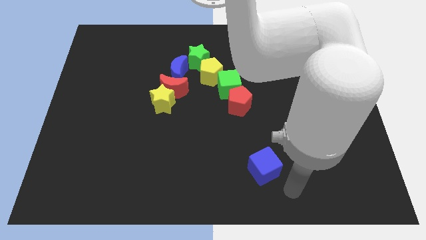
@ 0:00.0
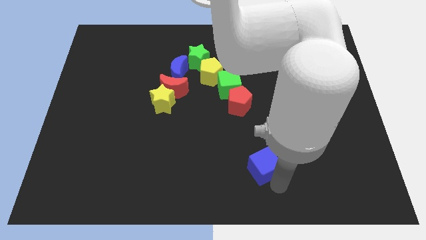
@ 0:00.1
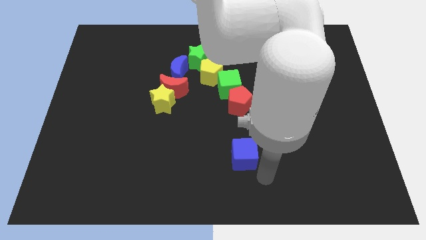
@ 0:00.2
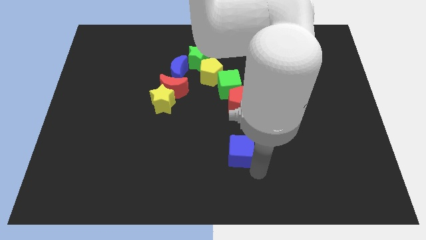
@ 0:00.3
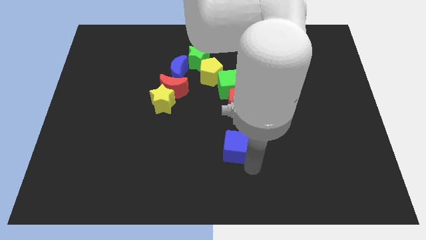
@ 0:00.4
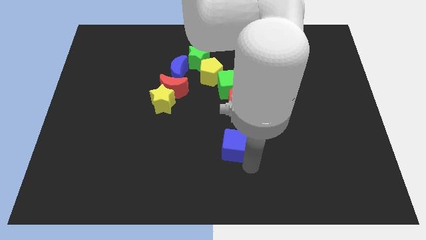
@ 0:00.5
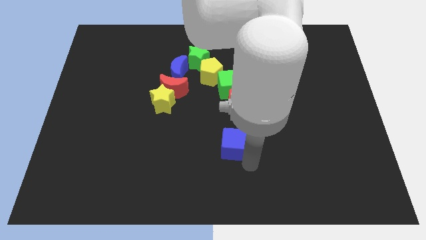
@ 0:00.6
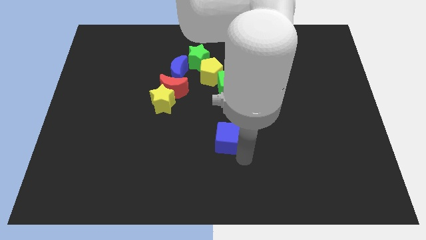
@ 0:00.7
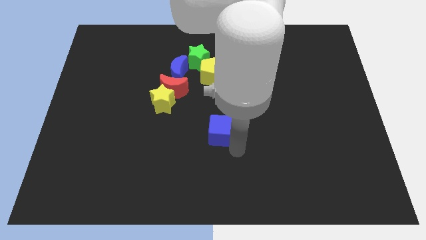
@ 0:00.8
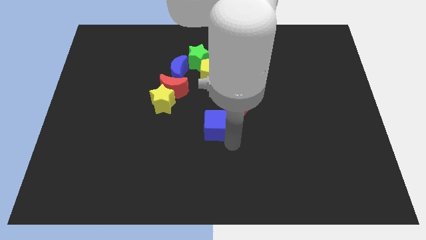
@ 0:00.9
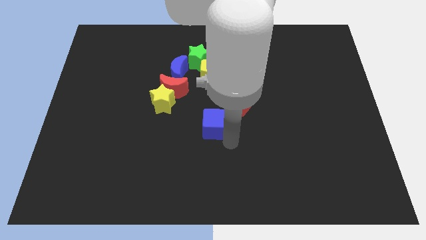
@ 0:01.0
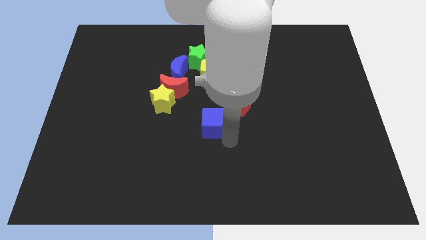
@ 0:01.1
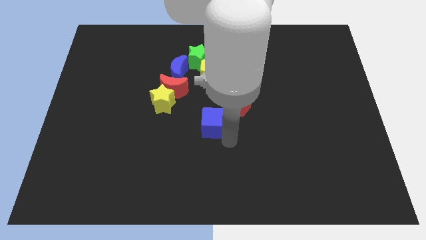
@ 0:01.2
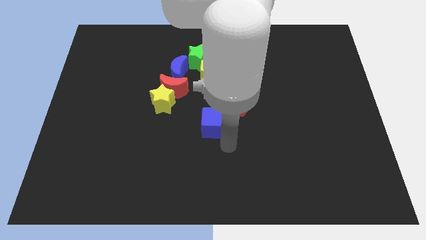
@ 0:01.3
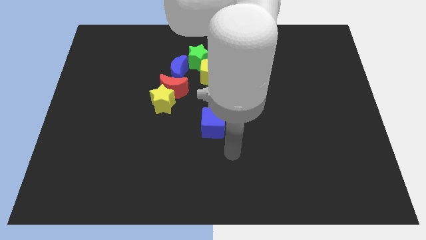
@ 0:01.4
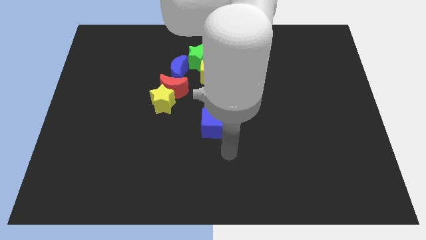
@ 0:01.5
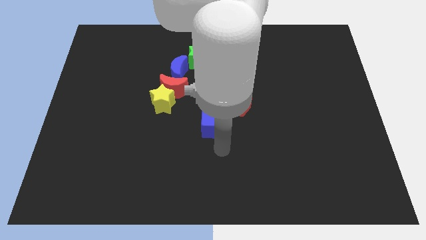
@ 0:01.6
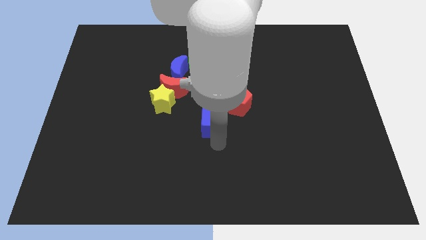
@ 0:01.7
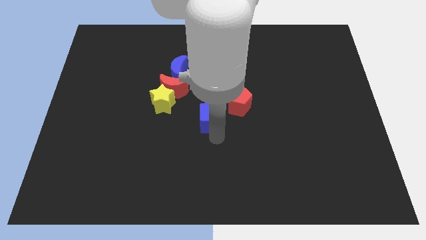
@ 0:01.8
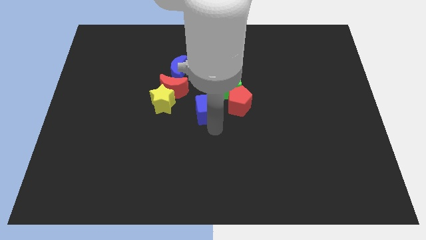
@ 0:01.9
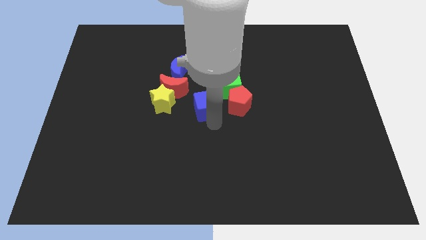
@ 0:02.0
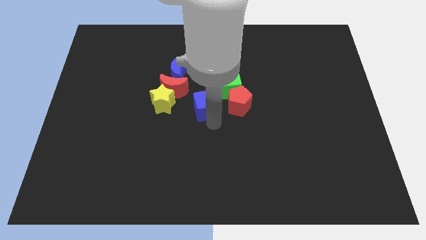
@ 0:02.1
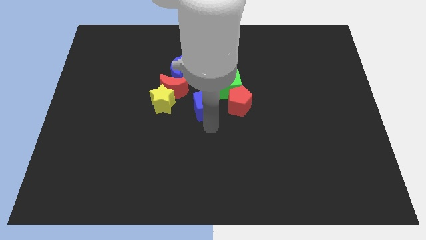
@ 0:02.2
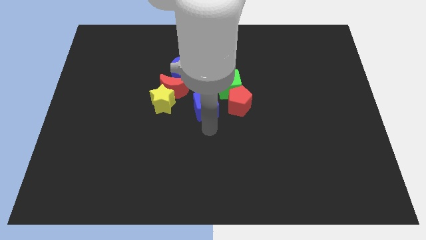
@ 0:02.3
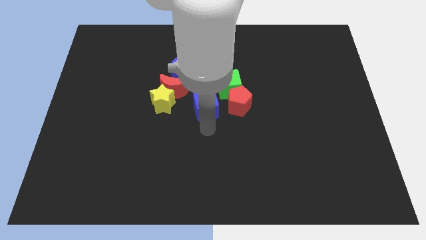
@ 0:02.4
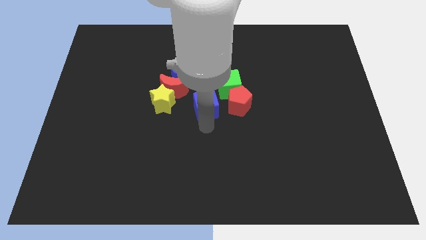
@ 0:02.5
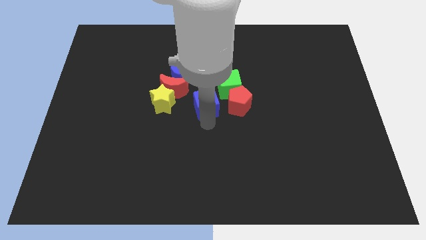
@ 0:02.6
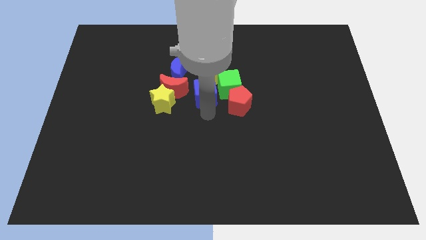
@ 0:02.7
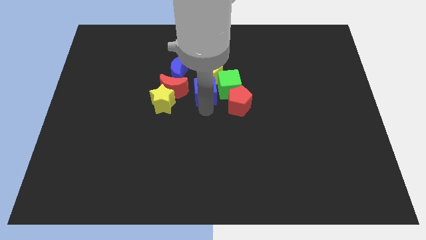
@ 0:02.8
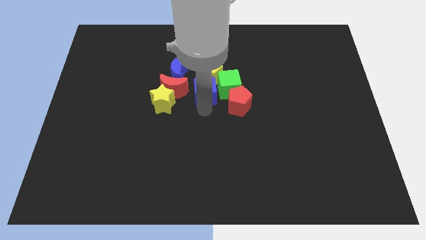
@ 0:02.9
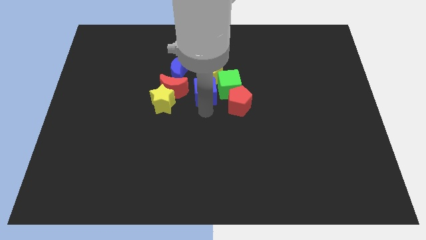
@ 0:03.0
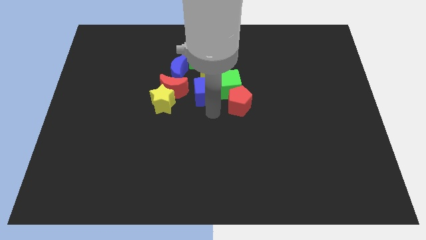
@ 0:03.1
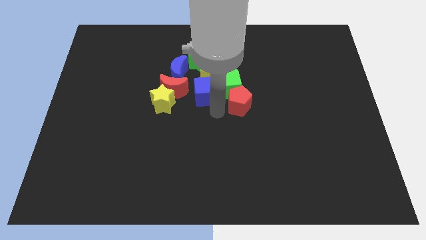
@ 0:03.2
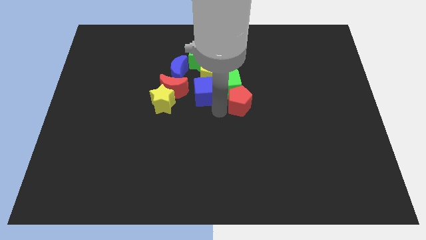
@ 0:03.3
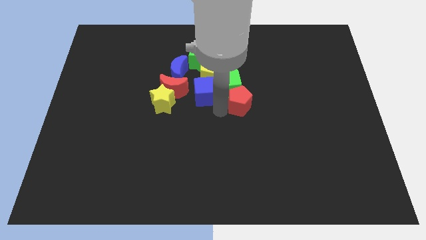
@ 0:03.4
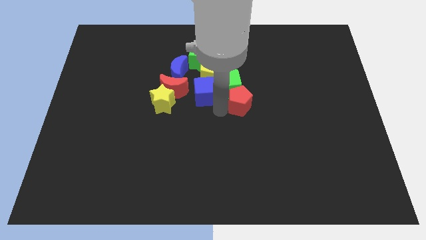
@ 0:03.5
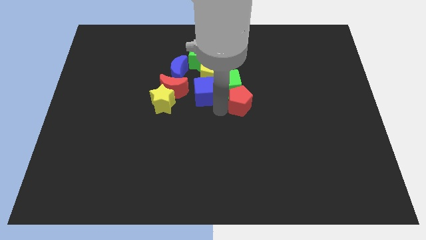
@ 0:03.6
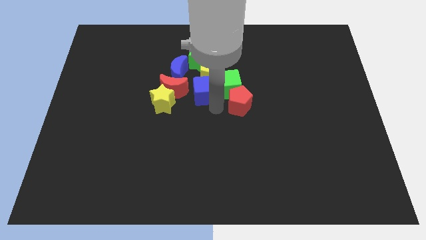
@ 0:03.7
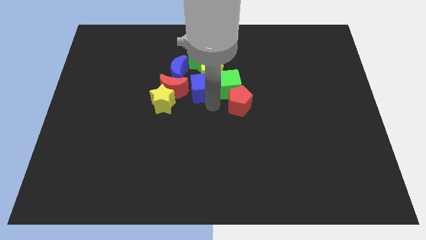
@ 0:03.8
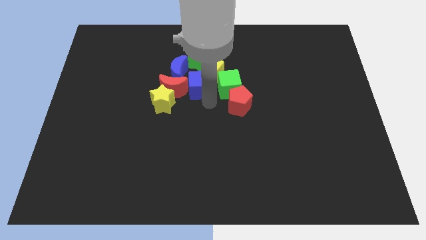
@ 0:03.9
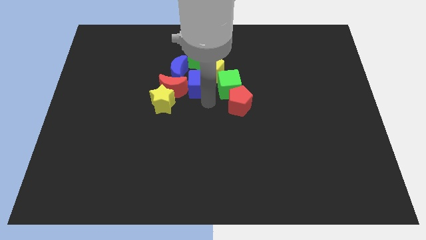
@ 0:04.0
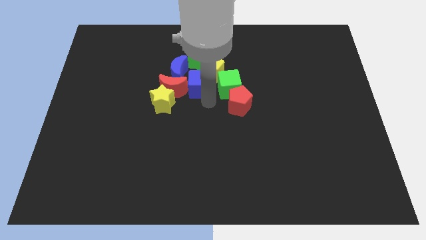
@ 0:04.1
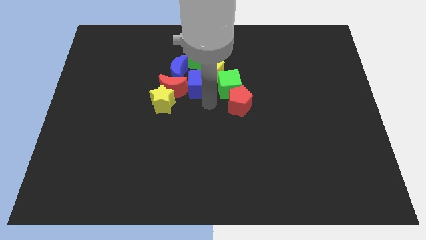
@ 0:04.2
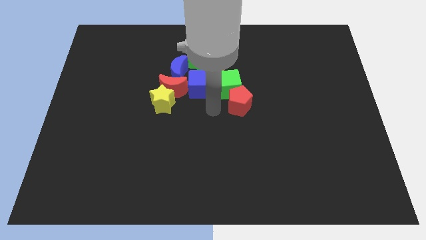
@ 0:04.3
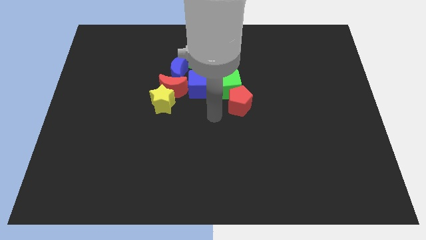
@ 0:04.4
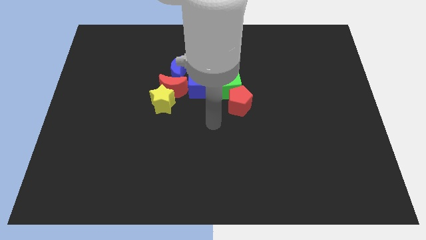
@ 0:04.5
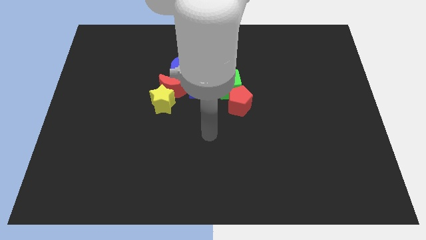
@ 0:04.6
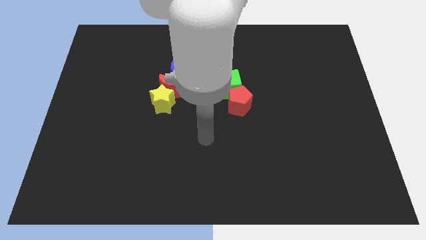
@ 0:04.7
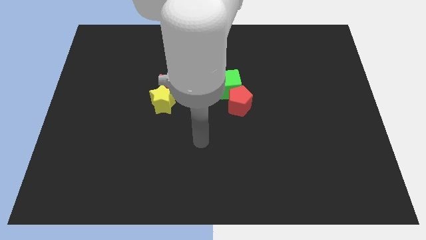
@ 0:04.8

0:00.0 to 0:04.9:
place the blue cube close to the left of the green cube

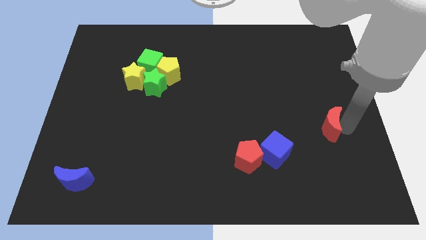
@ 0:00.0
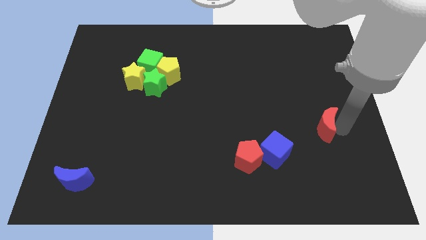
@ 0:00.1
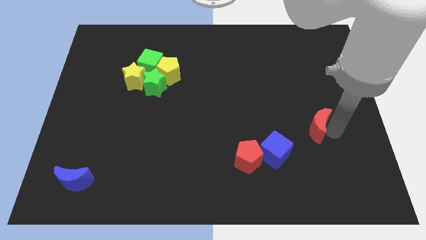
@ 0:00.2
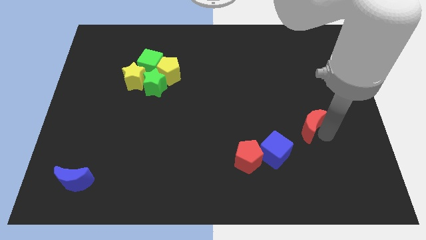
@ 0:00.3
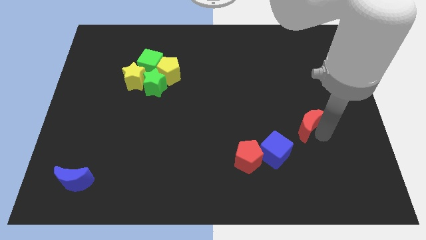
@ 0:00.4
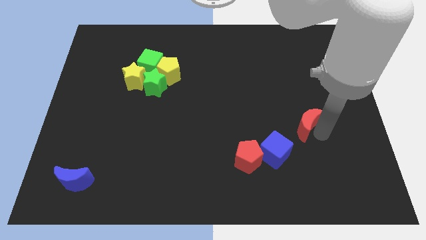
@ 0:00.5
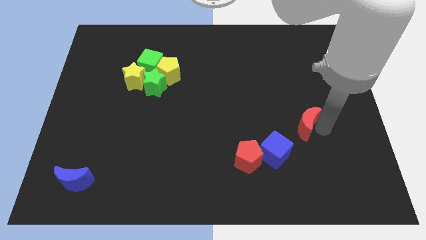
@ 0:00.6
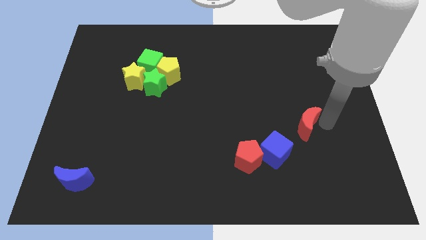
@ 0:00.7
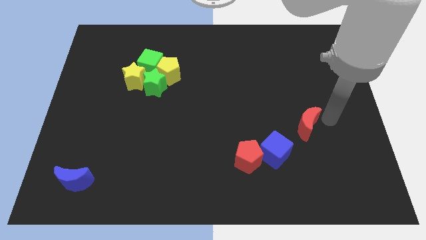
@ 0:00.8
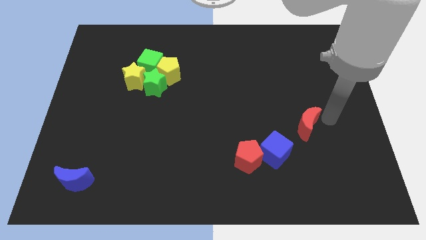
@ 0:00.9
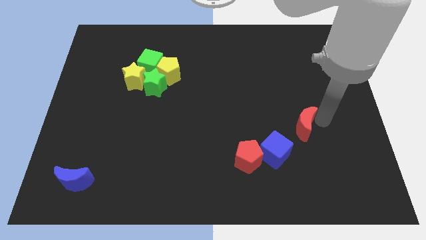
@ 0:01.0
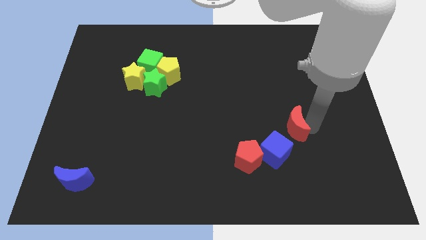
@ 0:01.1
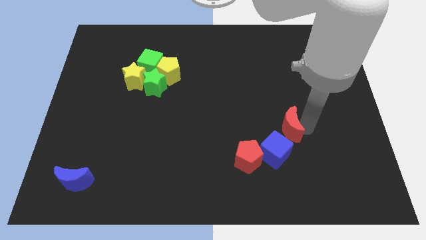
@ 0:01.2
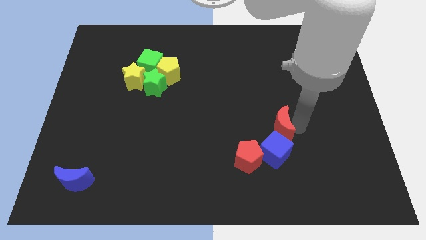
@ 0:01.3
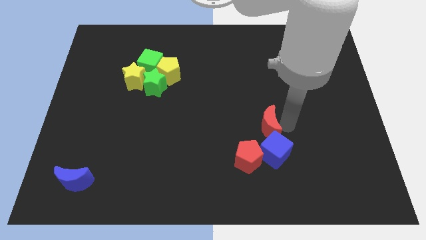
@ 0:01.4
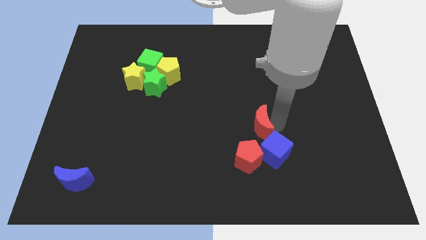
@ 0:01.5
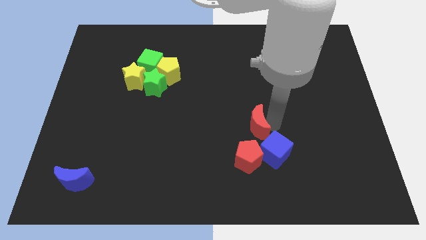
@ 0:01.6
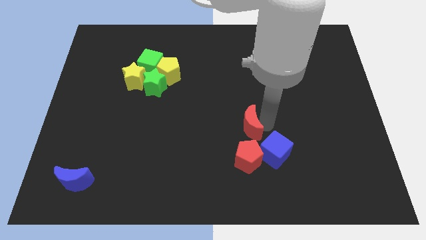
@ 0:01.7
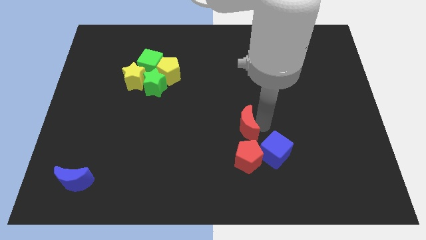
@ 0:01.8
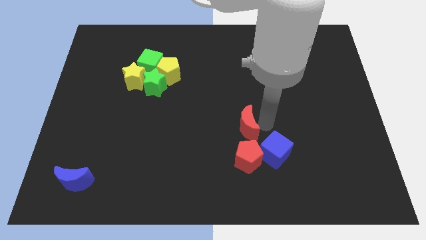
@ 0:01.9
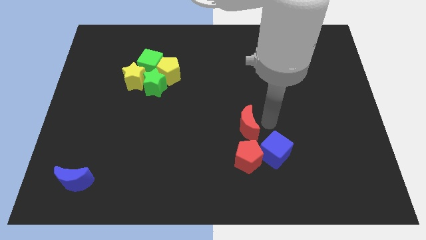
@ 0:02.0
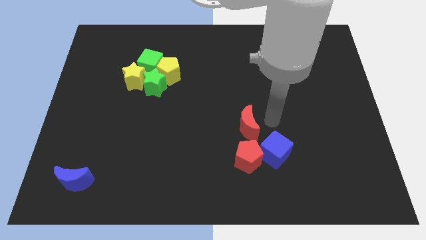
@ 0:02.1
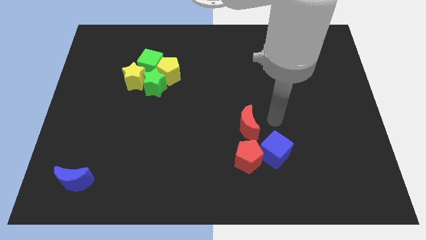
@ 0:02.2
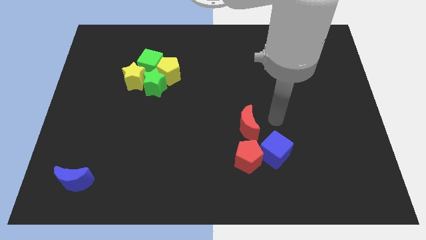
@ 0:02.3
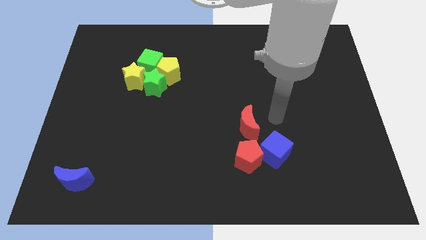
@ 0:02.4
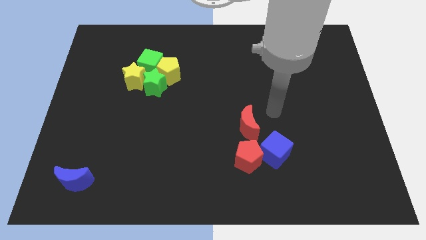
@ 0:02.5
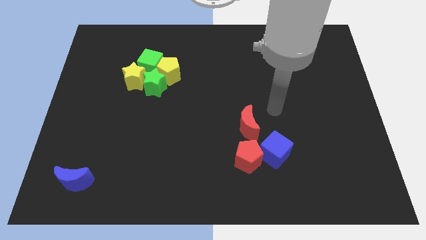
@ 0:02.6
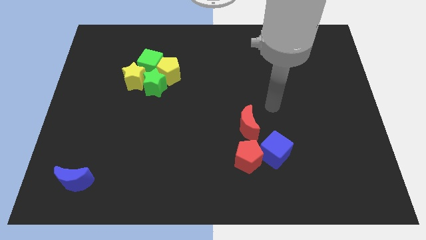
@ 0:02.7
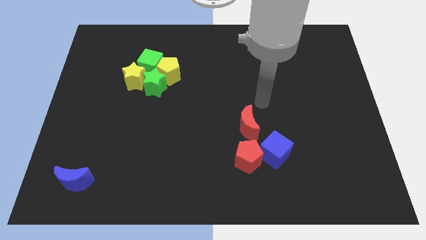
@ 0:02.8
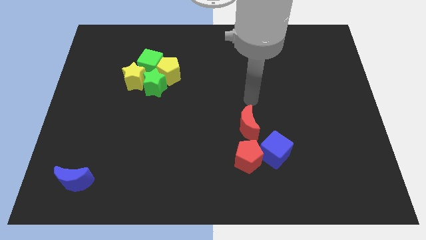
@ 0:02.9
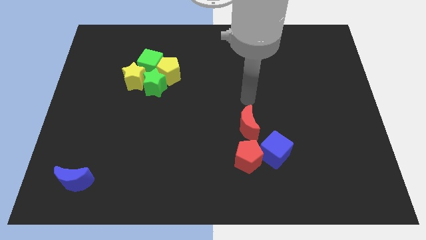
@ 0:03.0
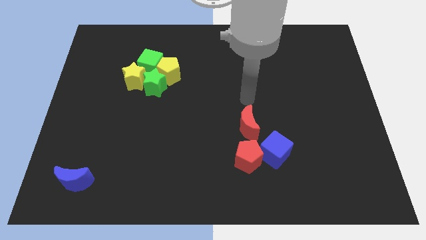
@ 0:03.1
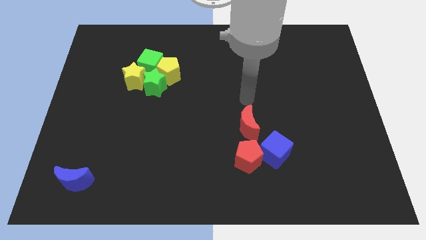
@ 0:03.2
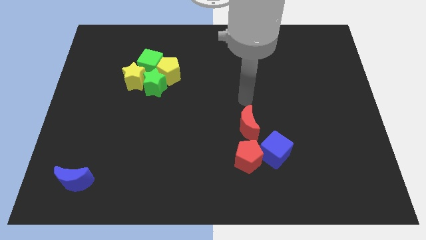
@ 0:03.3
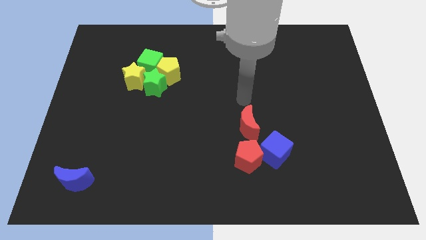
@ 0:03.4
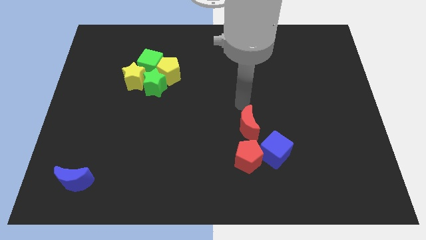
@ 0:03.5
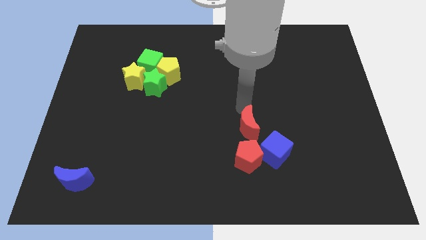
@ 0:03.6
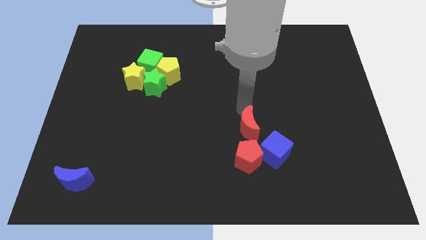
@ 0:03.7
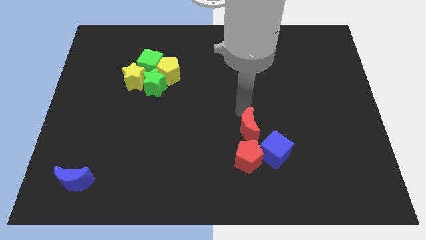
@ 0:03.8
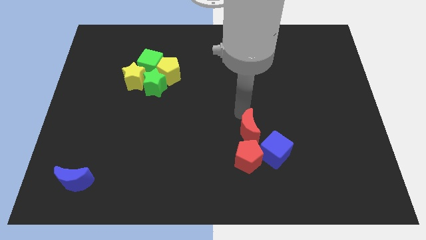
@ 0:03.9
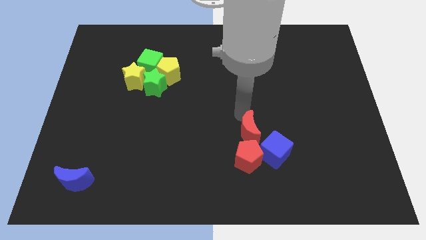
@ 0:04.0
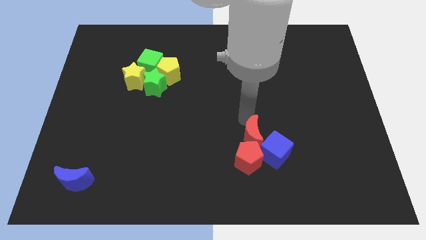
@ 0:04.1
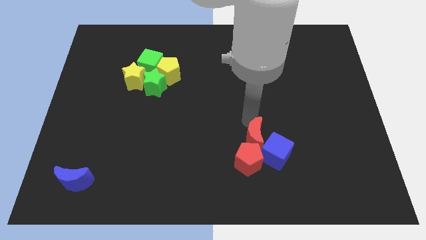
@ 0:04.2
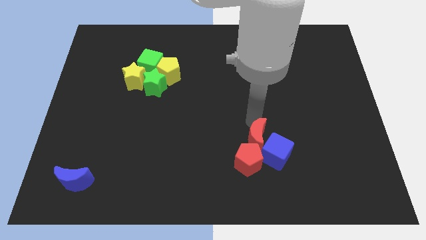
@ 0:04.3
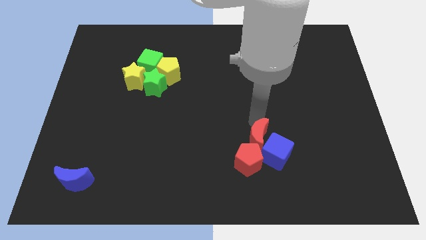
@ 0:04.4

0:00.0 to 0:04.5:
move the red moon to the left of the blue cube
